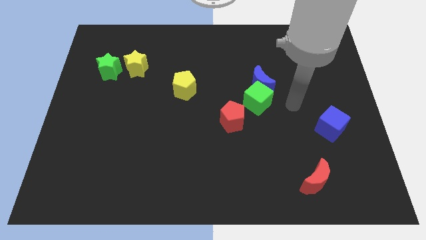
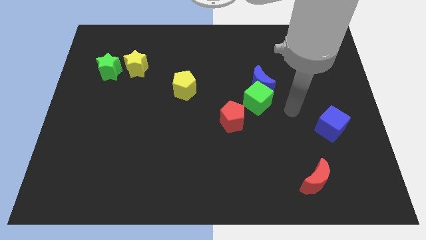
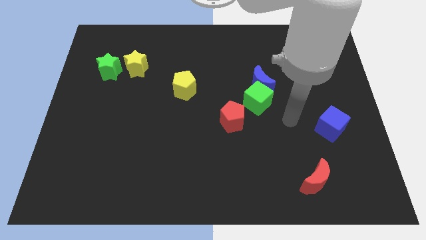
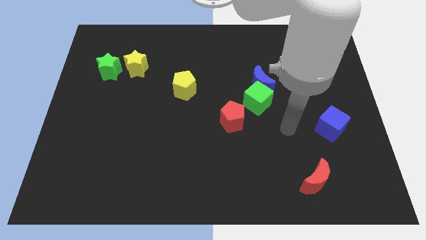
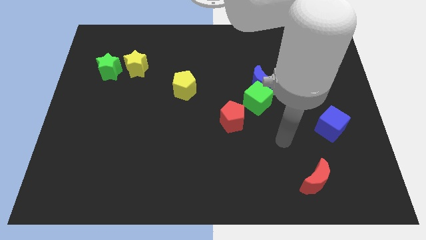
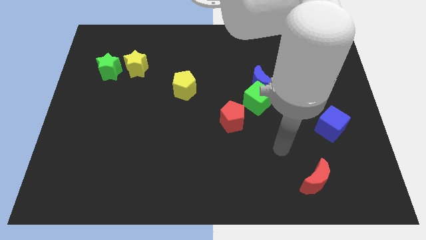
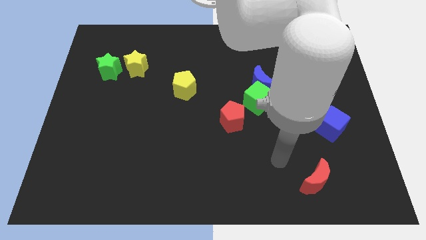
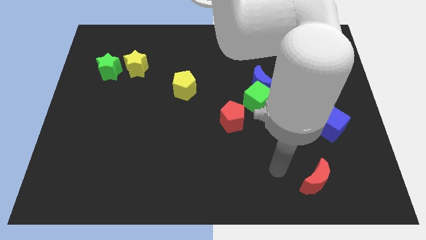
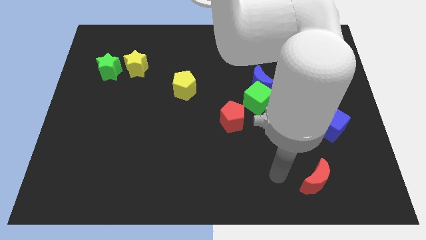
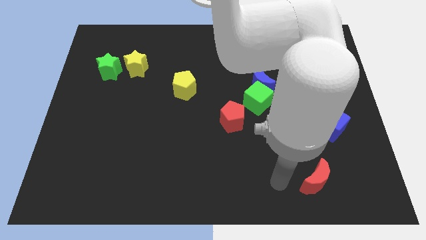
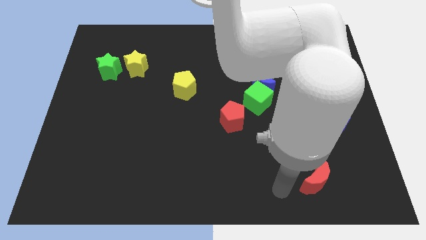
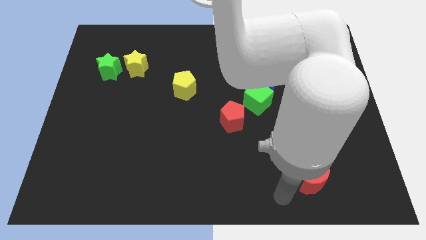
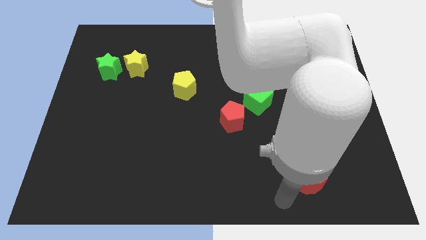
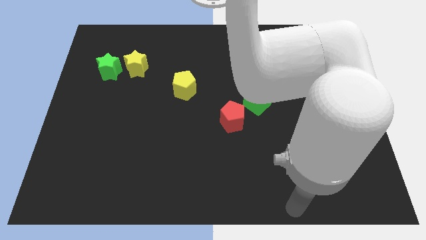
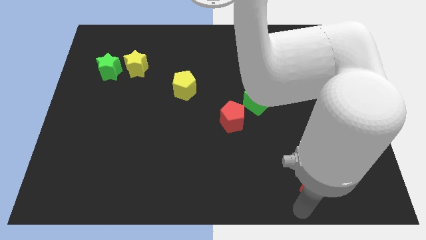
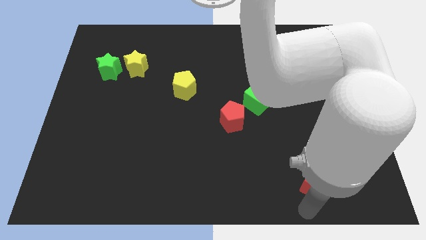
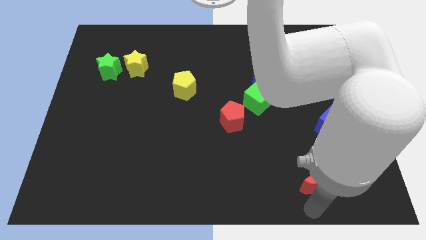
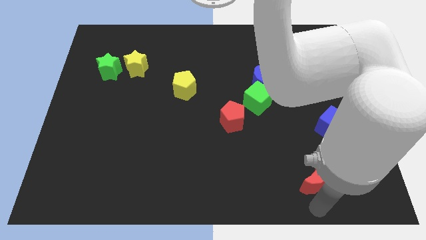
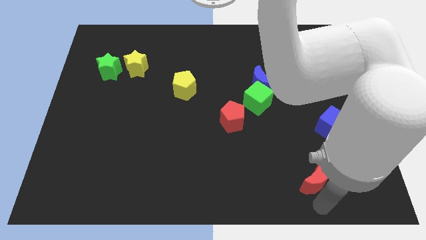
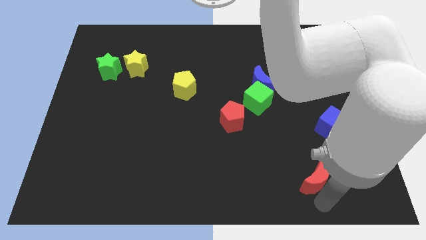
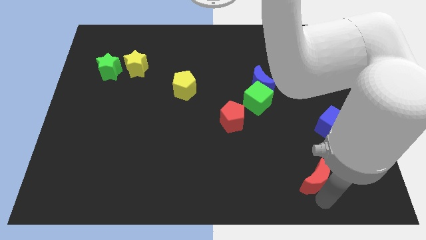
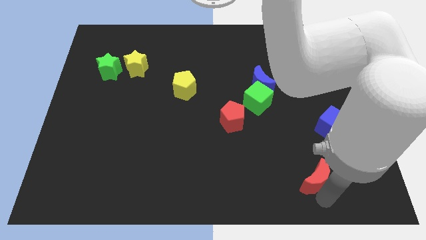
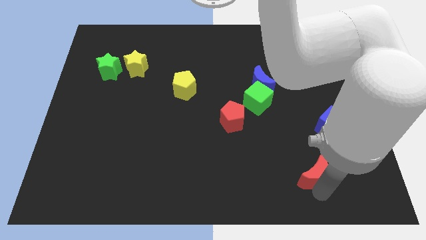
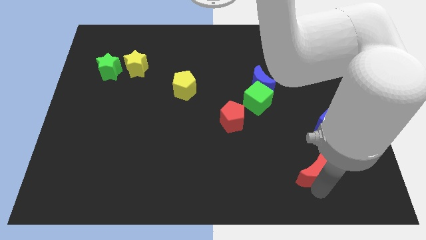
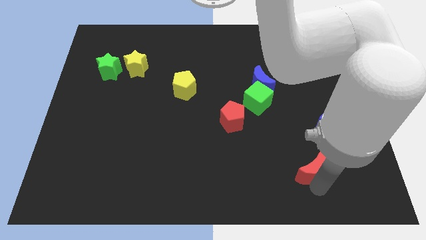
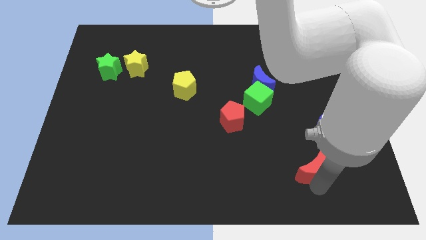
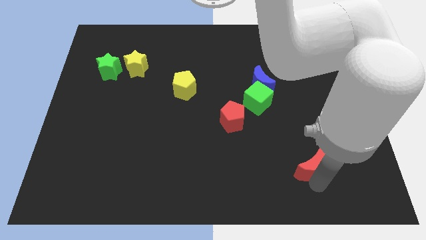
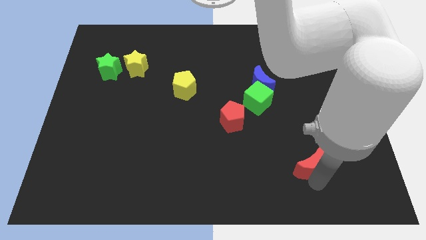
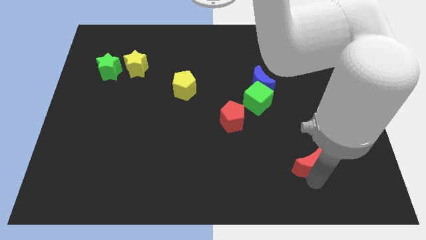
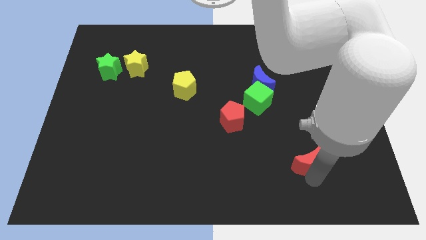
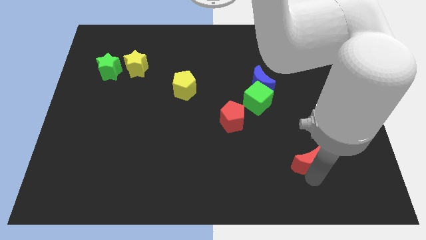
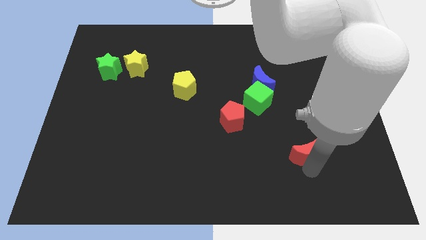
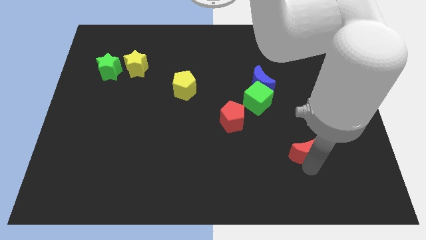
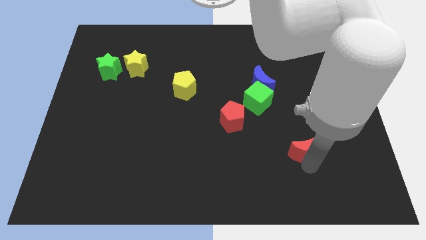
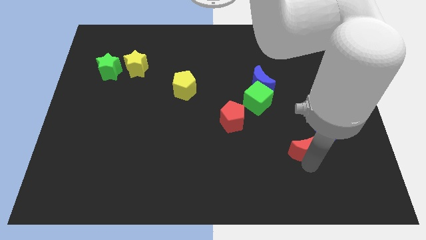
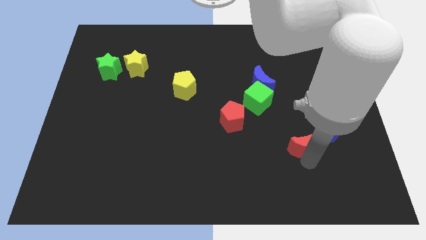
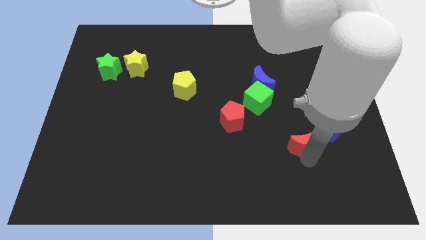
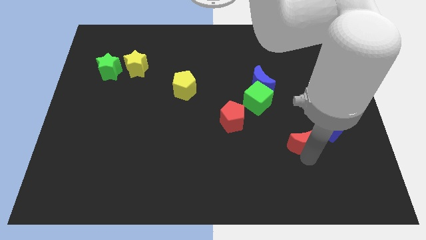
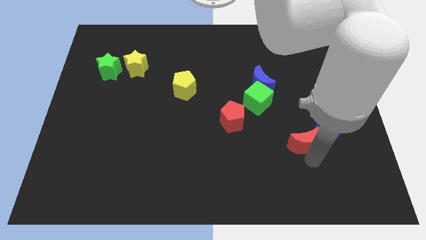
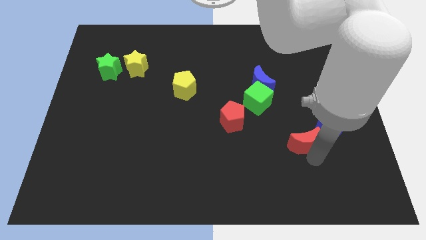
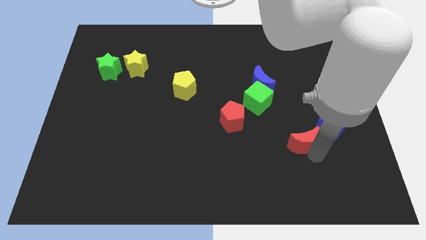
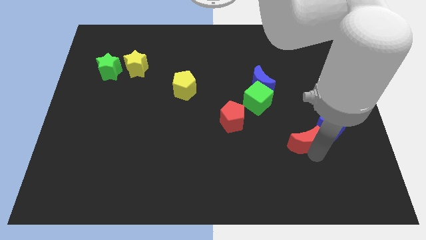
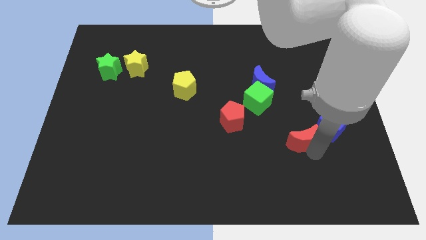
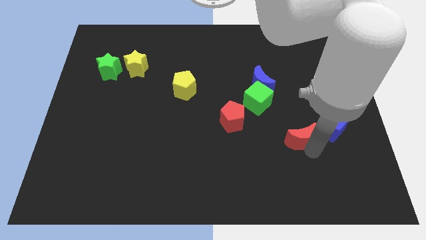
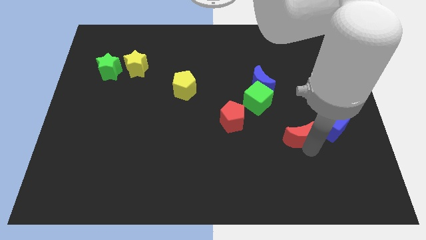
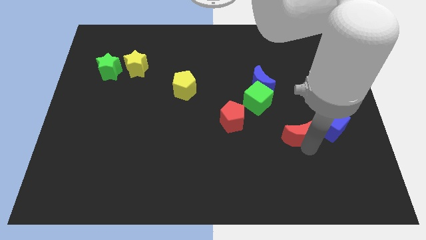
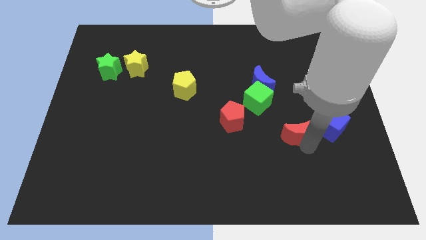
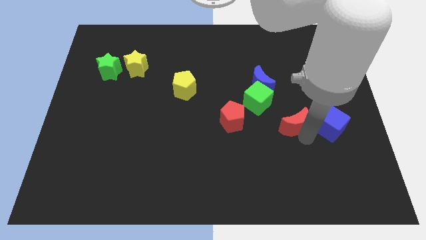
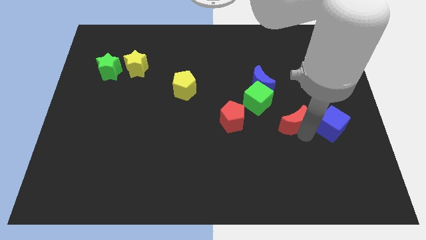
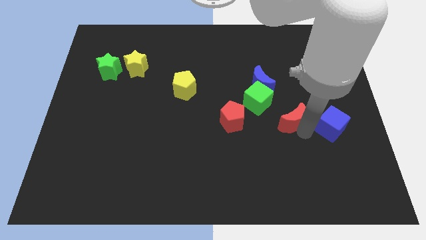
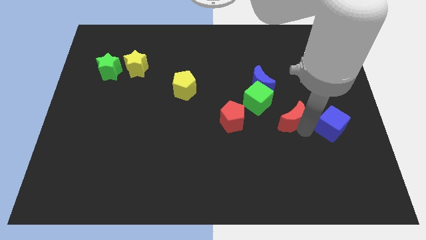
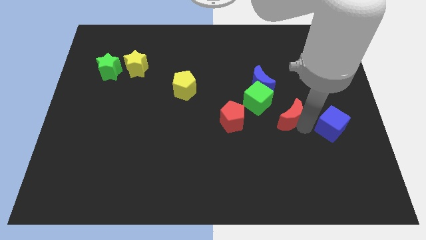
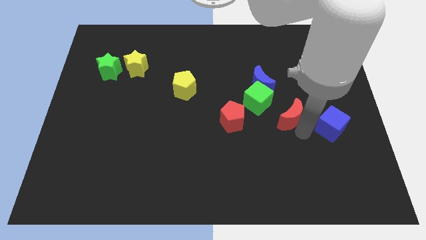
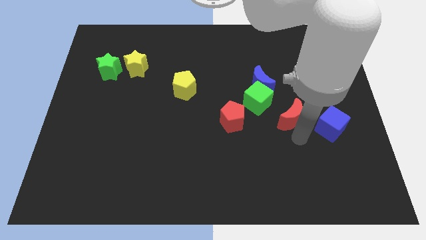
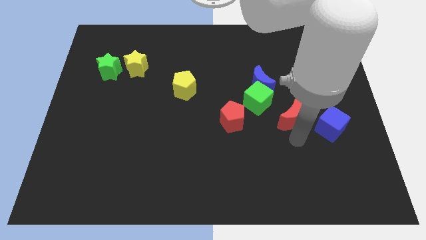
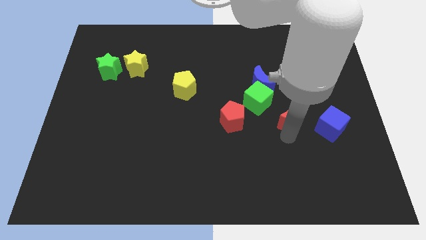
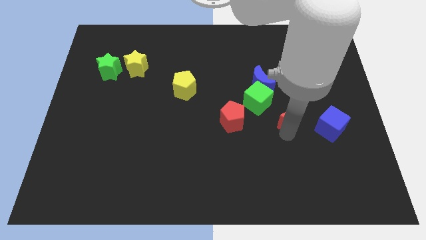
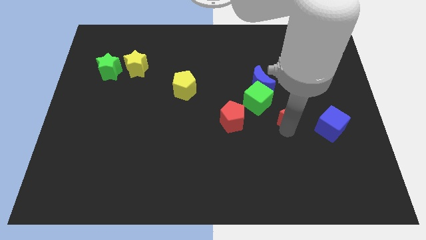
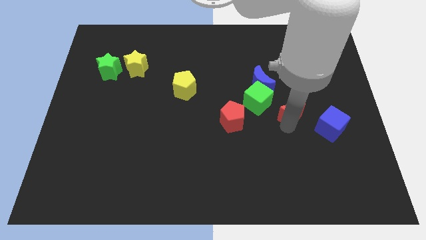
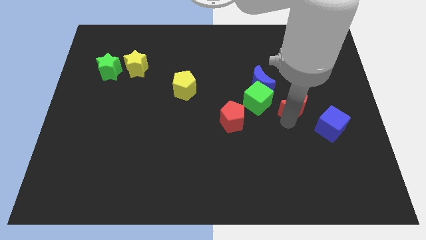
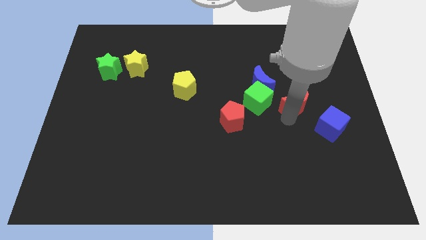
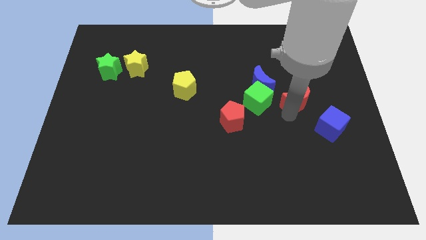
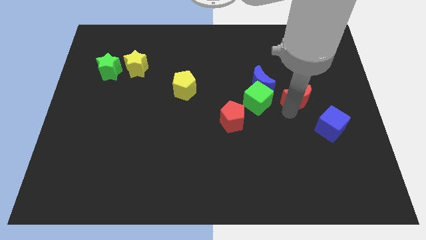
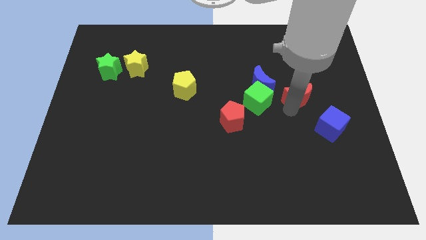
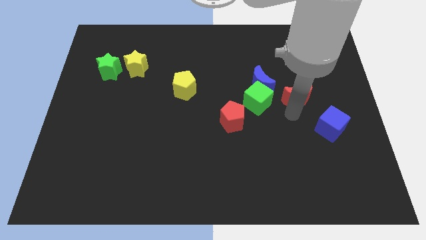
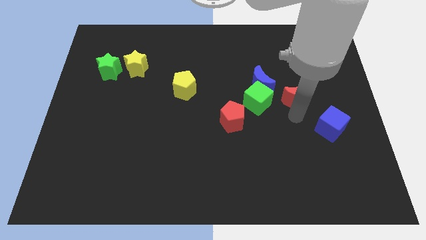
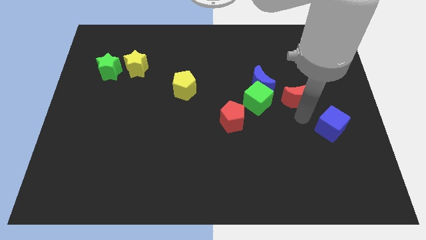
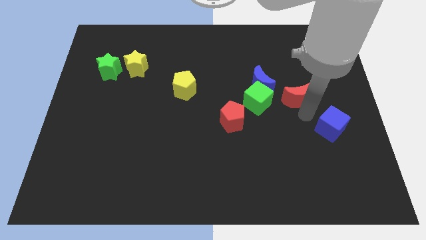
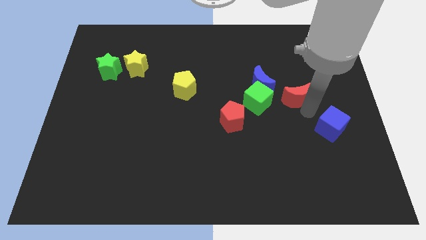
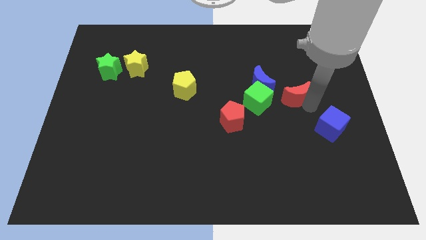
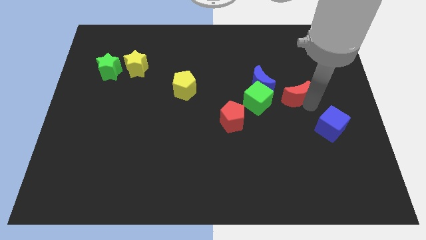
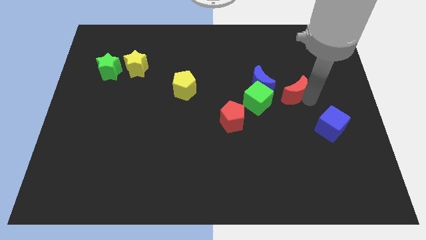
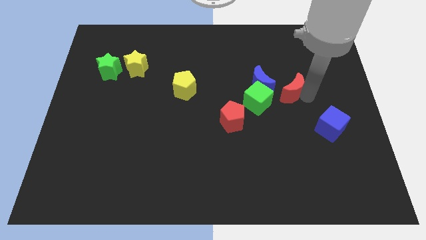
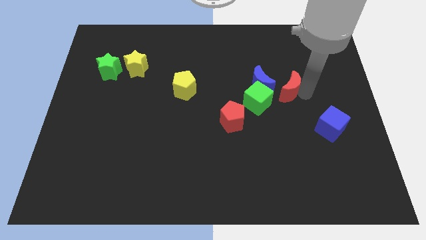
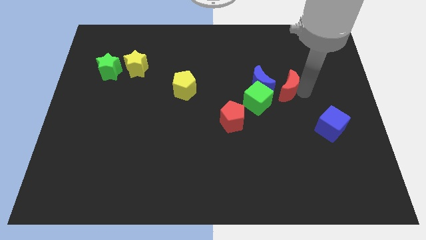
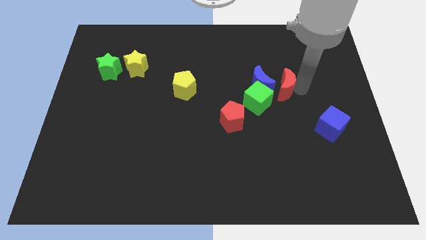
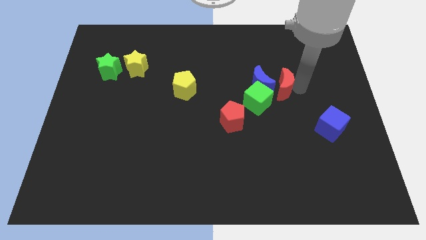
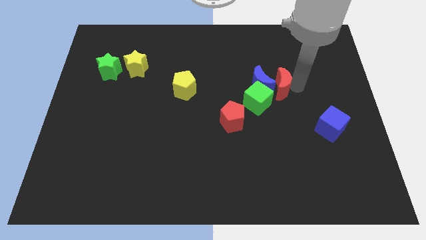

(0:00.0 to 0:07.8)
move the red moon to the blue moon

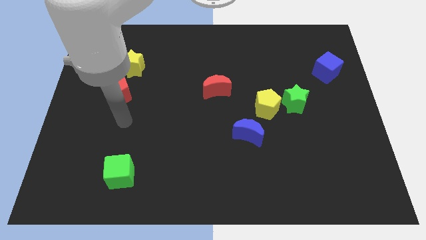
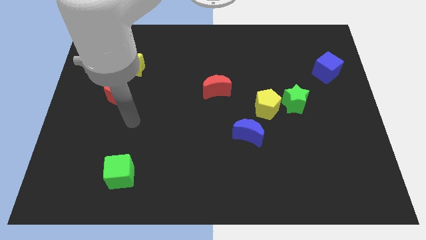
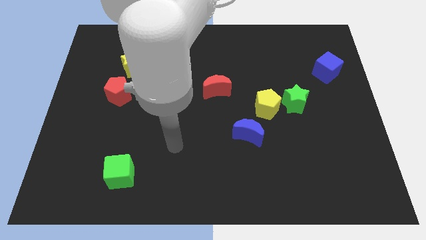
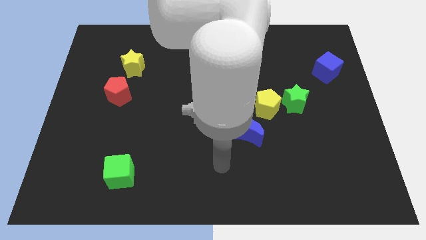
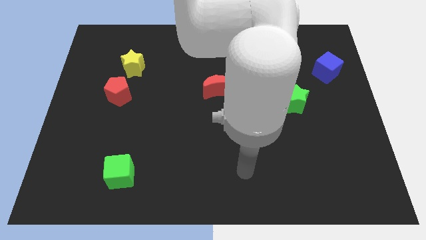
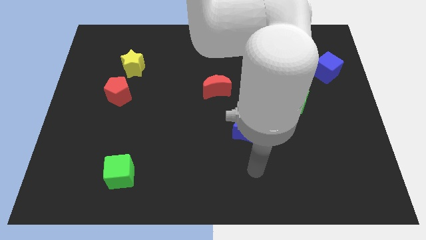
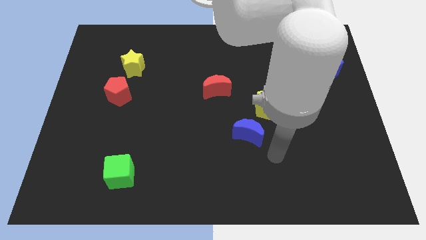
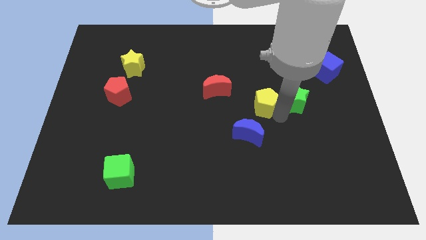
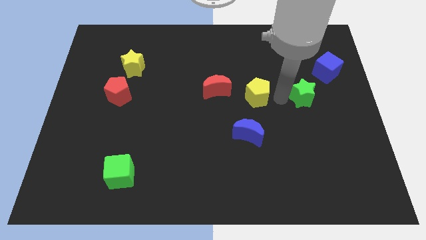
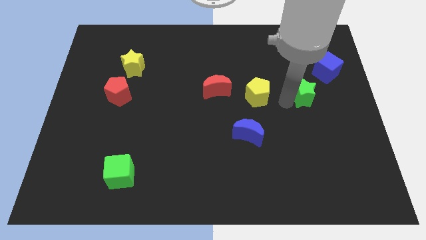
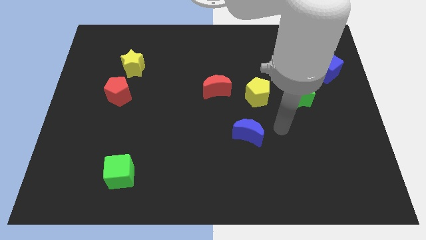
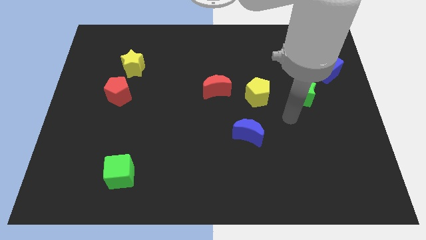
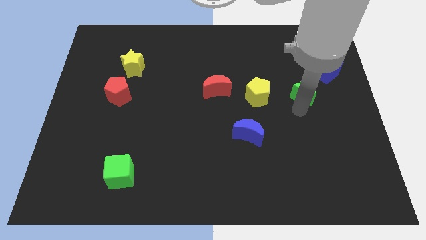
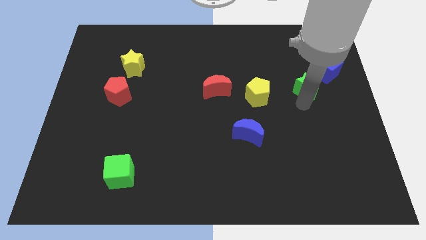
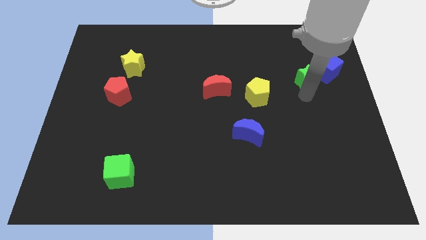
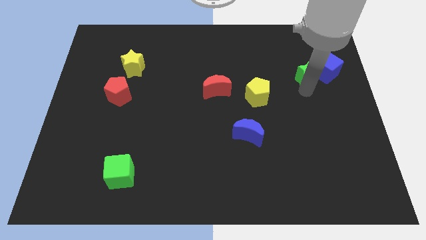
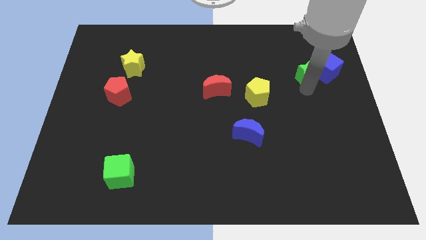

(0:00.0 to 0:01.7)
push the green star next to the blue cube
